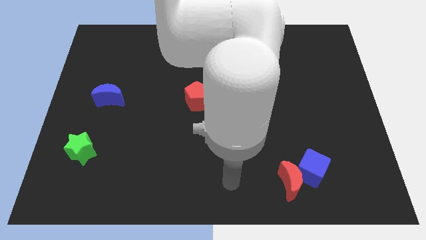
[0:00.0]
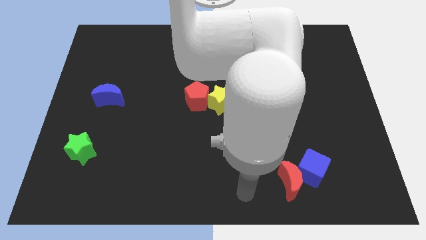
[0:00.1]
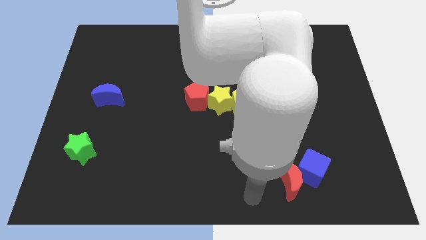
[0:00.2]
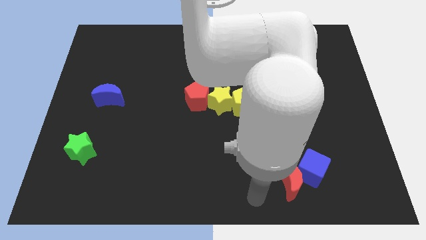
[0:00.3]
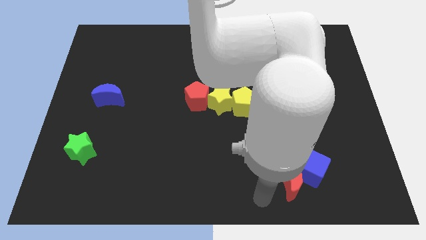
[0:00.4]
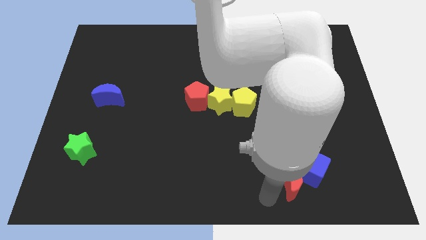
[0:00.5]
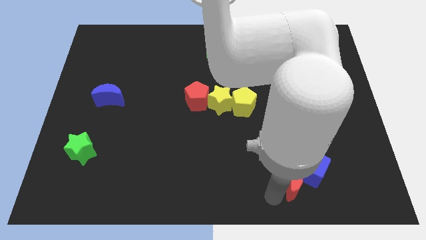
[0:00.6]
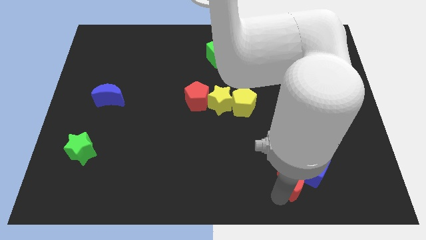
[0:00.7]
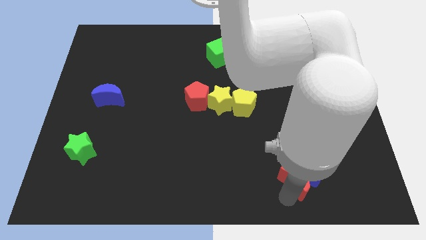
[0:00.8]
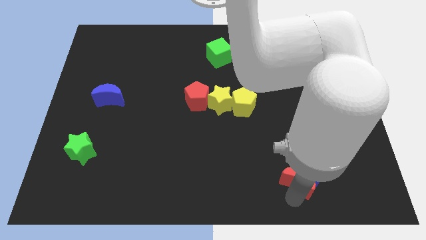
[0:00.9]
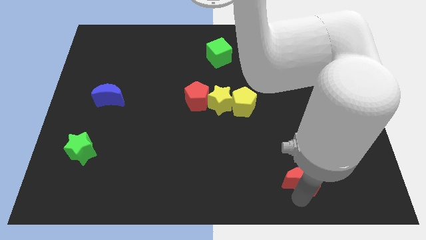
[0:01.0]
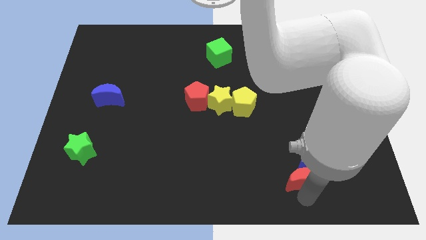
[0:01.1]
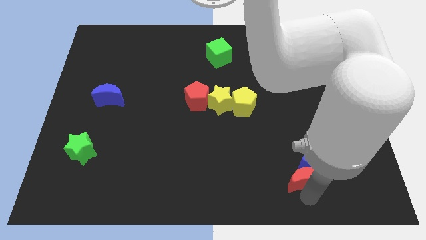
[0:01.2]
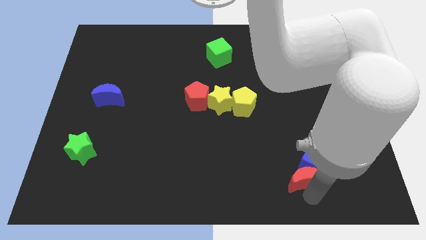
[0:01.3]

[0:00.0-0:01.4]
move the arm into the red crescent

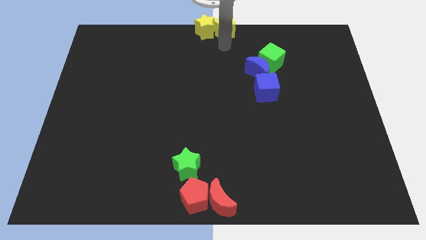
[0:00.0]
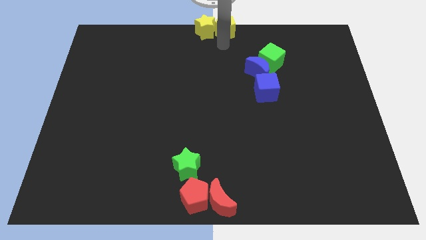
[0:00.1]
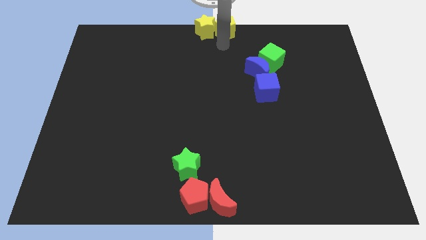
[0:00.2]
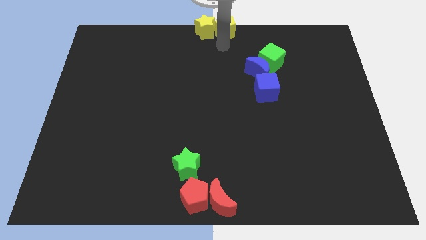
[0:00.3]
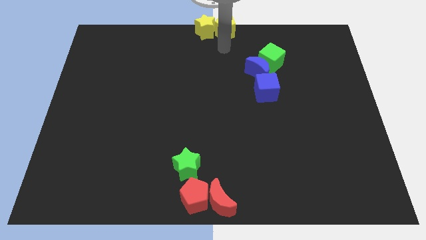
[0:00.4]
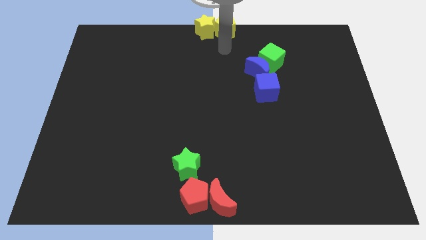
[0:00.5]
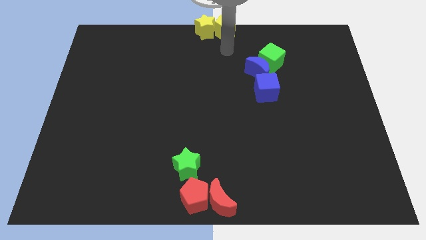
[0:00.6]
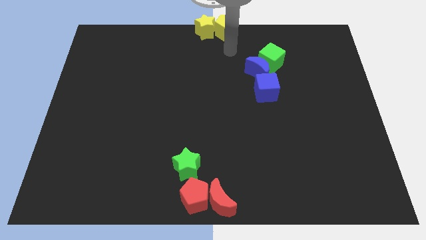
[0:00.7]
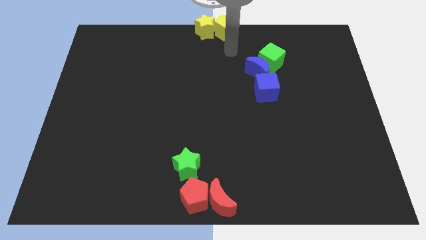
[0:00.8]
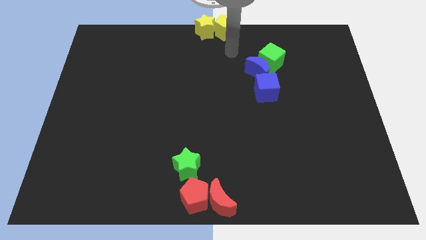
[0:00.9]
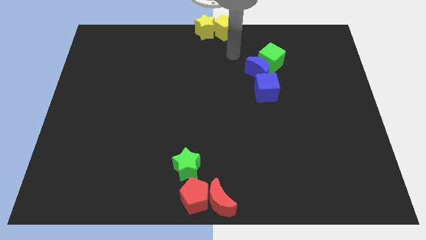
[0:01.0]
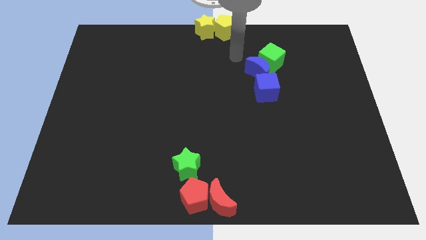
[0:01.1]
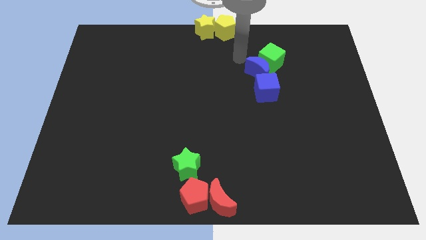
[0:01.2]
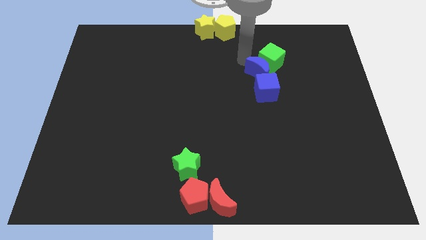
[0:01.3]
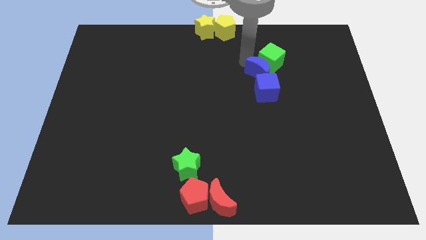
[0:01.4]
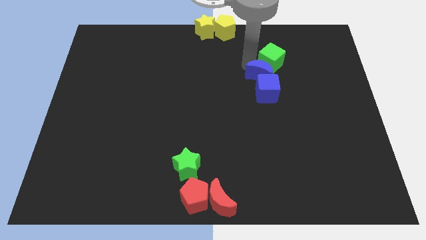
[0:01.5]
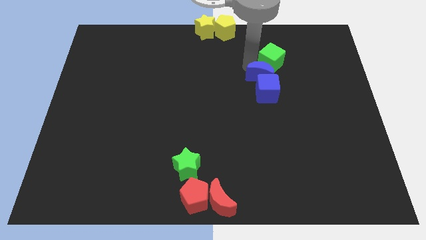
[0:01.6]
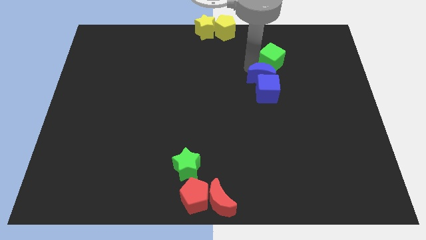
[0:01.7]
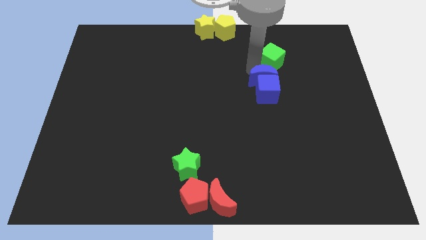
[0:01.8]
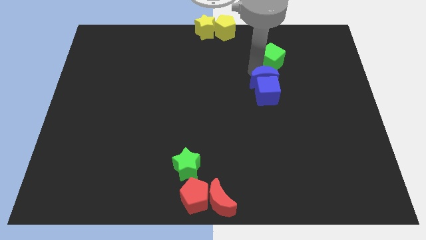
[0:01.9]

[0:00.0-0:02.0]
move the blue moon into the blue cube

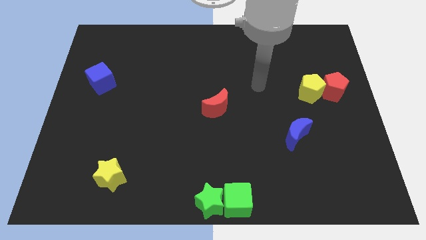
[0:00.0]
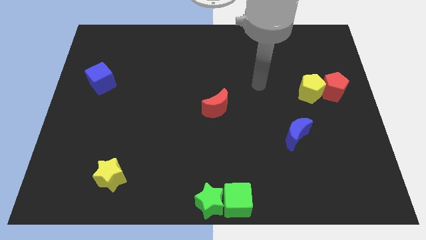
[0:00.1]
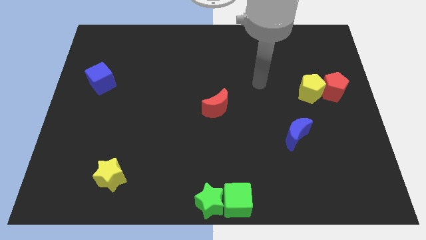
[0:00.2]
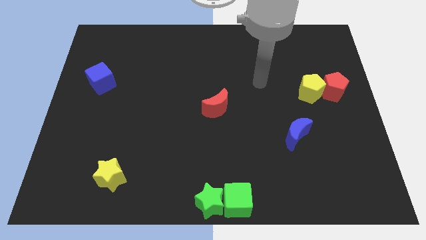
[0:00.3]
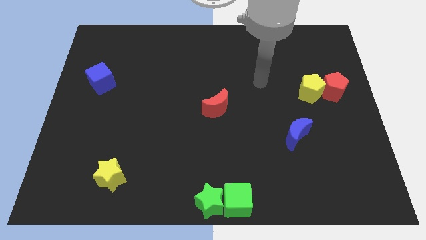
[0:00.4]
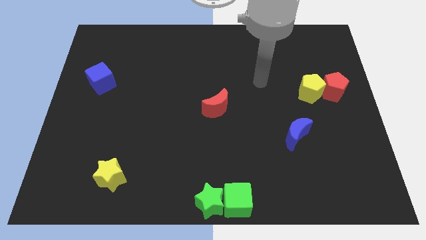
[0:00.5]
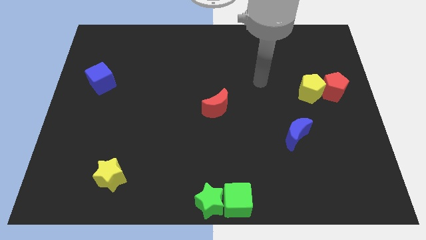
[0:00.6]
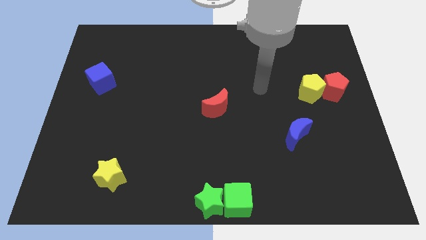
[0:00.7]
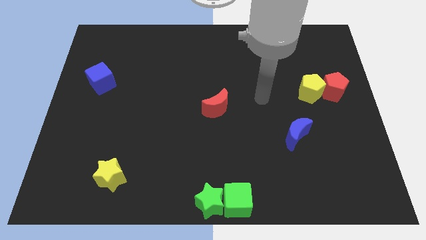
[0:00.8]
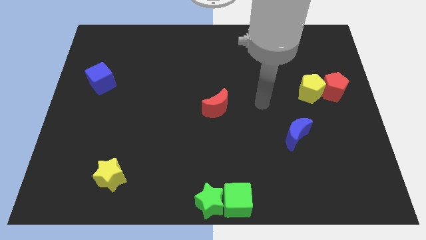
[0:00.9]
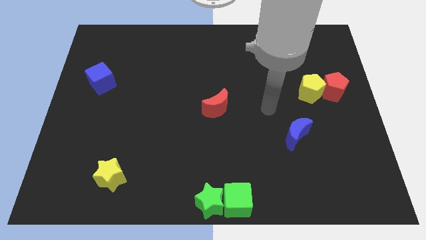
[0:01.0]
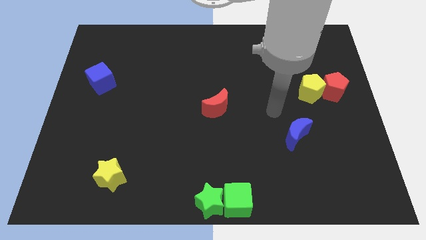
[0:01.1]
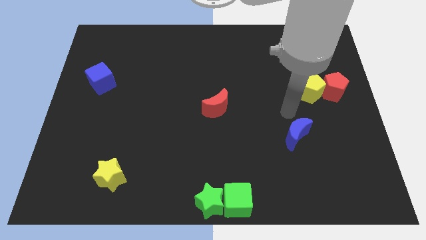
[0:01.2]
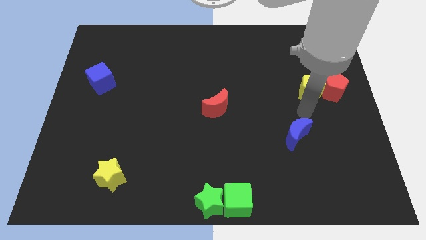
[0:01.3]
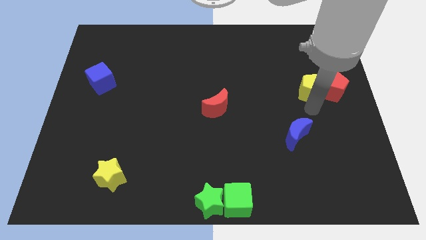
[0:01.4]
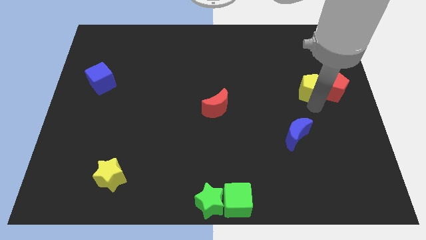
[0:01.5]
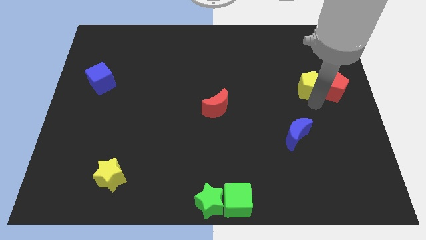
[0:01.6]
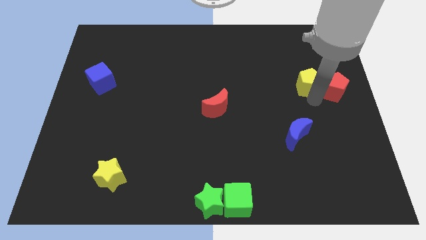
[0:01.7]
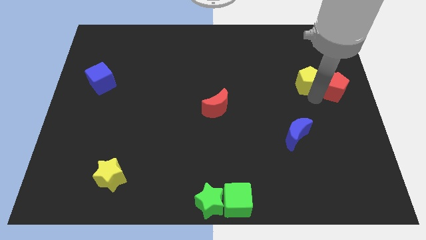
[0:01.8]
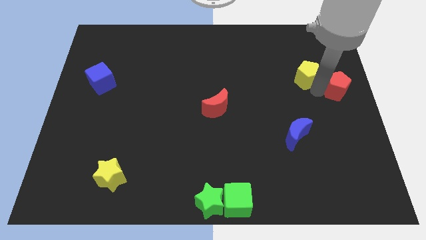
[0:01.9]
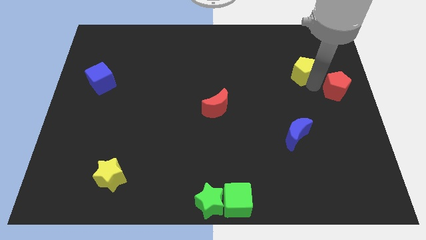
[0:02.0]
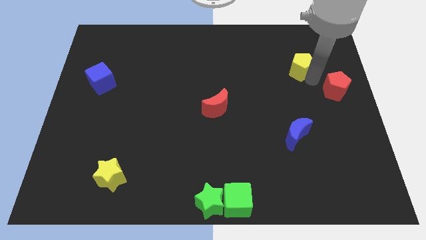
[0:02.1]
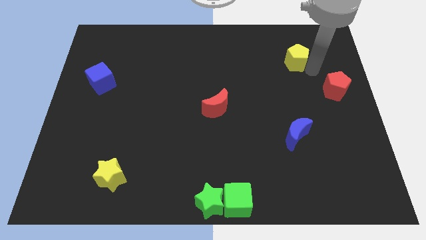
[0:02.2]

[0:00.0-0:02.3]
separate the yellow pentagon from the red pentagon

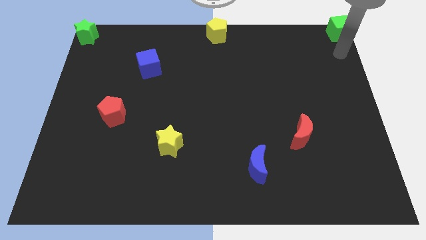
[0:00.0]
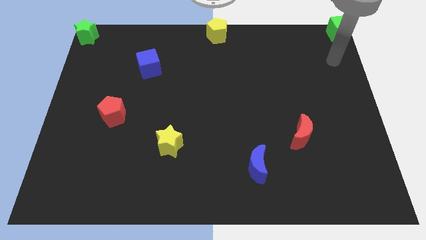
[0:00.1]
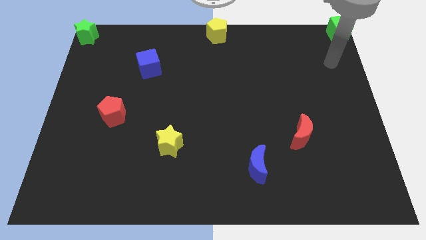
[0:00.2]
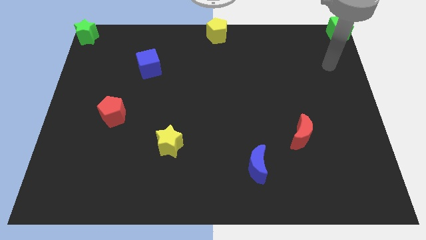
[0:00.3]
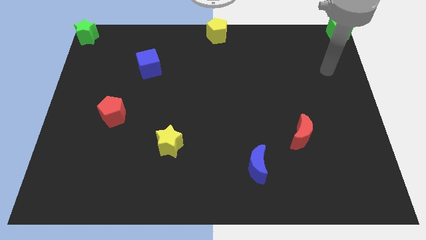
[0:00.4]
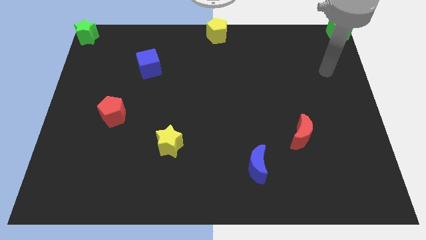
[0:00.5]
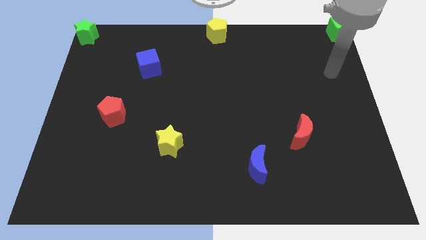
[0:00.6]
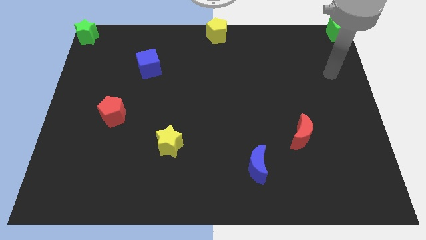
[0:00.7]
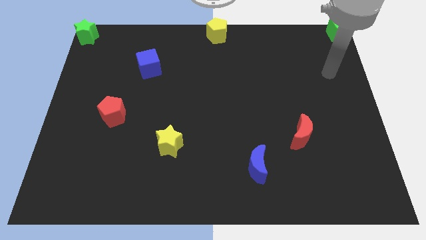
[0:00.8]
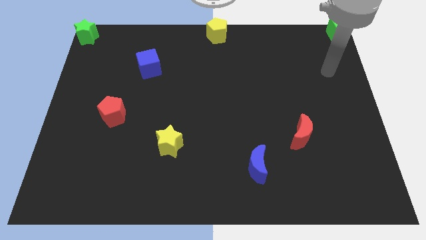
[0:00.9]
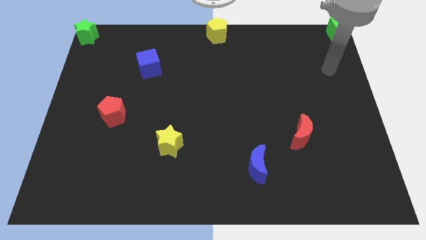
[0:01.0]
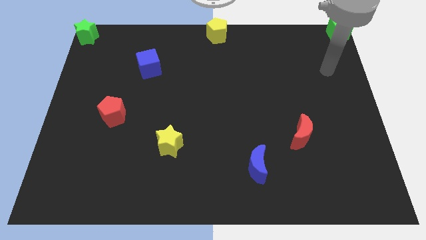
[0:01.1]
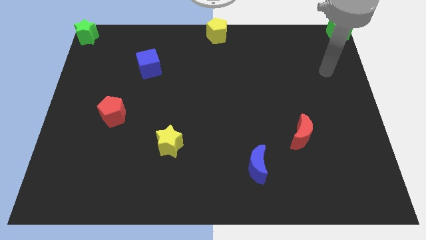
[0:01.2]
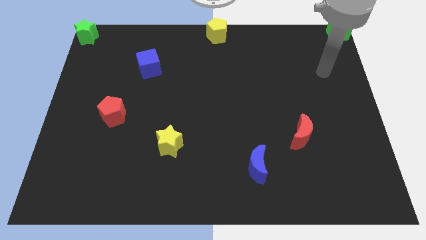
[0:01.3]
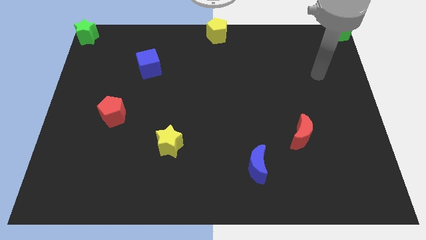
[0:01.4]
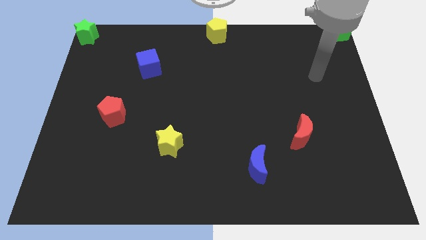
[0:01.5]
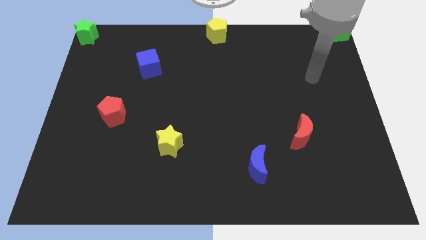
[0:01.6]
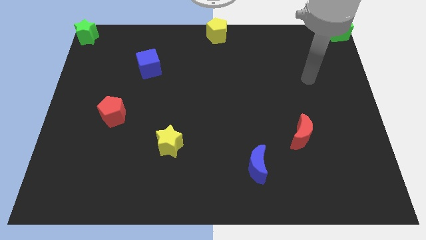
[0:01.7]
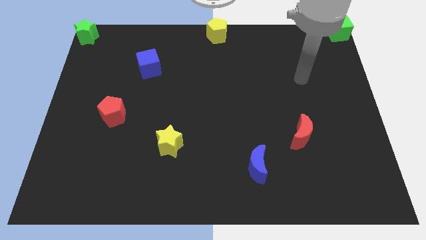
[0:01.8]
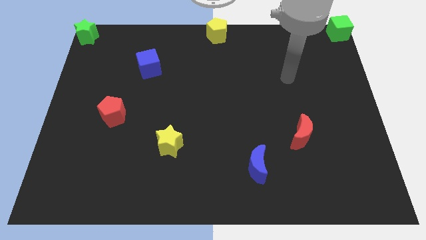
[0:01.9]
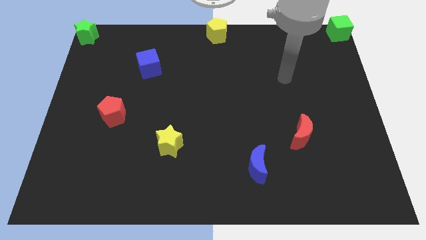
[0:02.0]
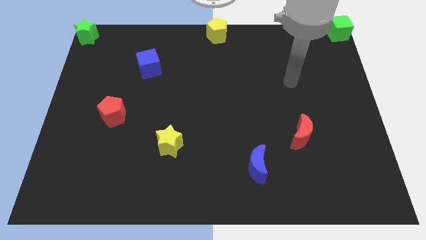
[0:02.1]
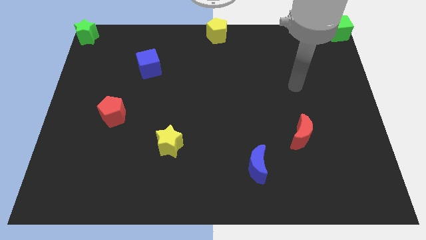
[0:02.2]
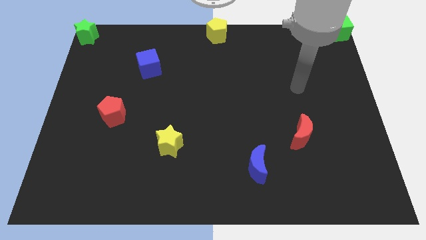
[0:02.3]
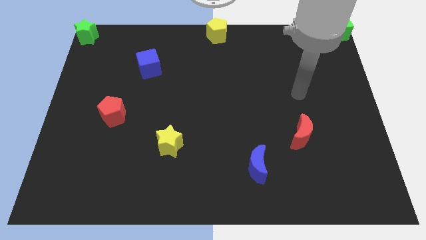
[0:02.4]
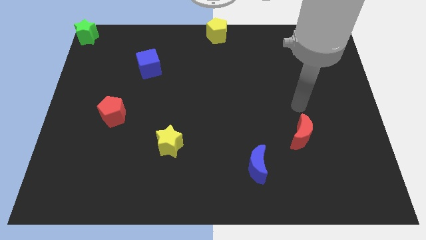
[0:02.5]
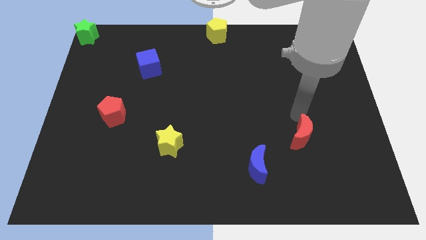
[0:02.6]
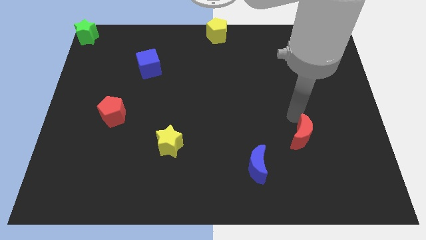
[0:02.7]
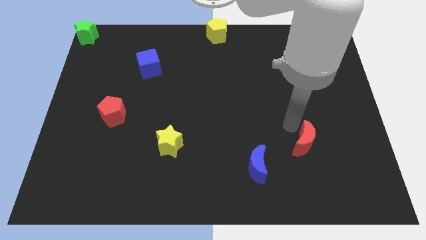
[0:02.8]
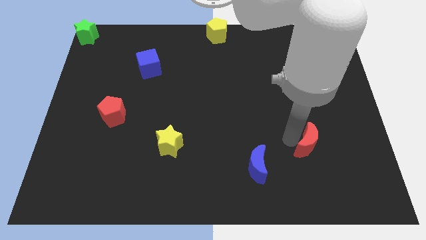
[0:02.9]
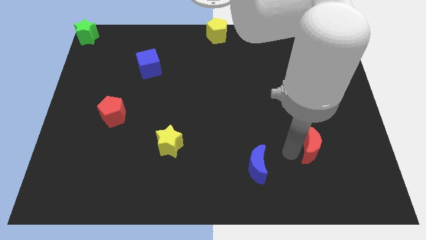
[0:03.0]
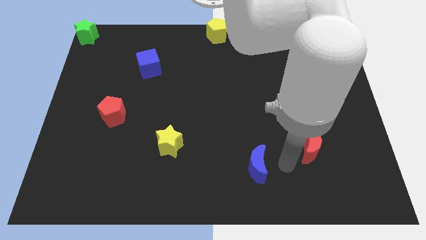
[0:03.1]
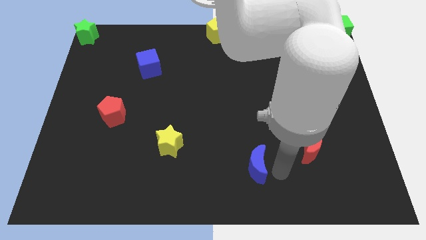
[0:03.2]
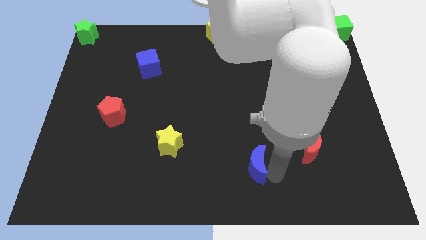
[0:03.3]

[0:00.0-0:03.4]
push the red crescent slightly to the bottom
